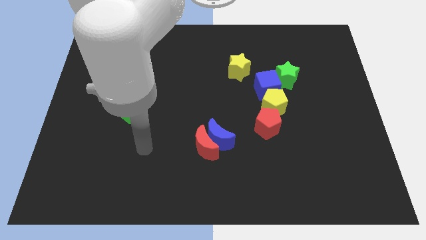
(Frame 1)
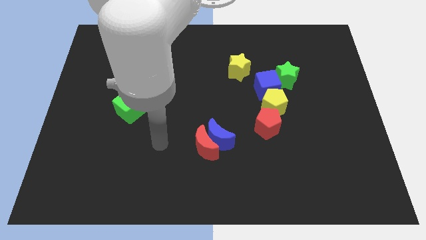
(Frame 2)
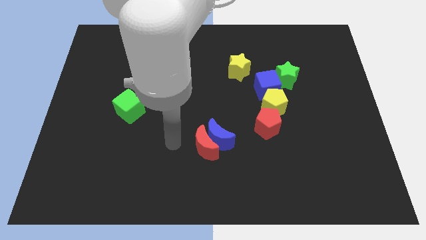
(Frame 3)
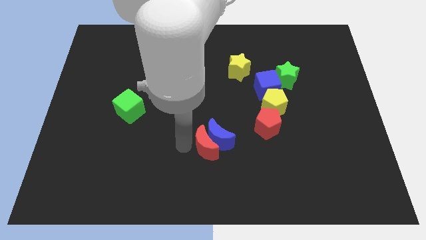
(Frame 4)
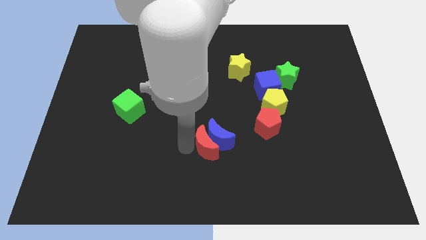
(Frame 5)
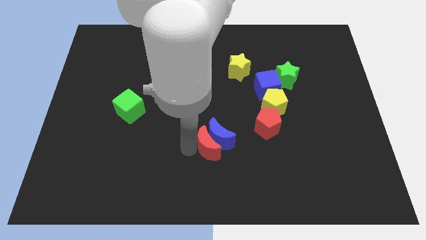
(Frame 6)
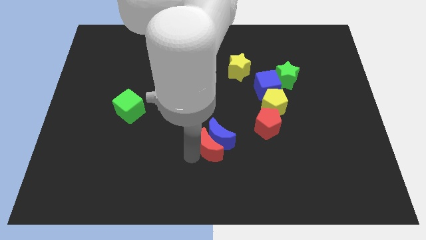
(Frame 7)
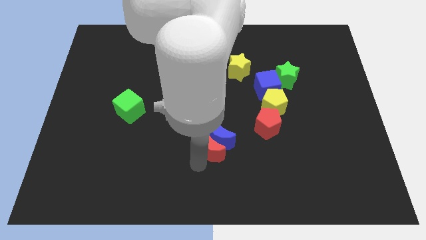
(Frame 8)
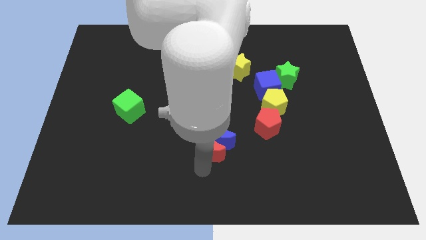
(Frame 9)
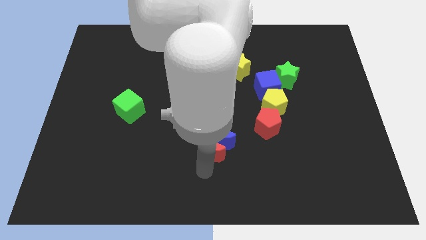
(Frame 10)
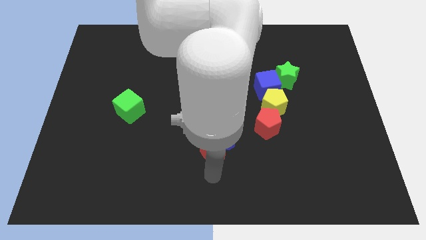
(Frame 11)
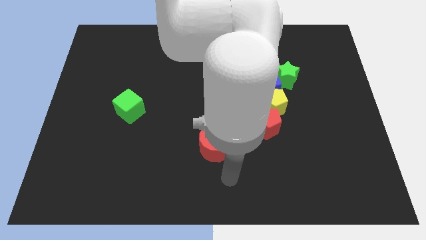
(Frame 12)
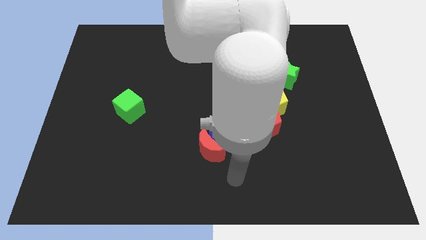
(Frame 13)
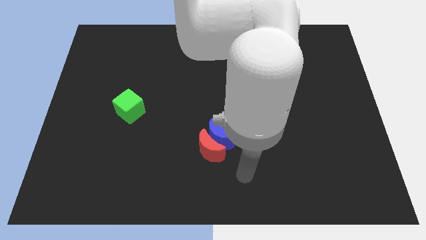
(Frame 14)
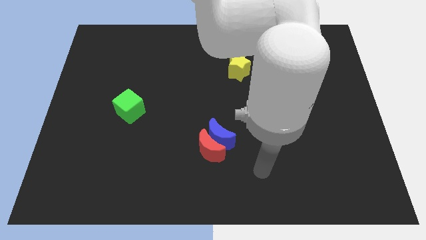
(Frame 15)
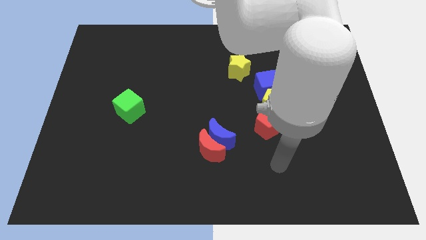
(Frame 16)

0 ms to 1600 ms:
tap the red moon

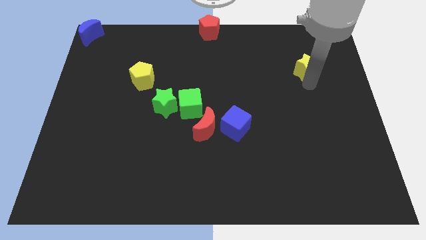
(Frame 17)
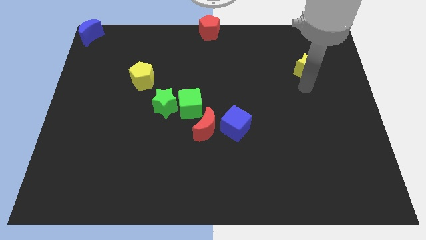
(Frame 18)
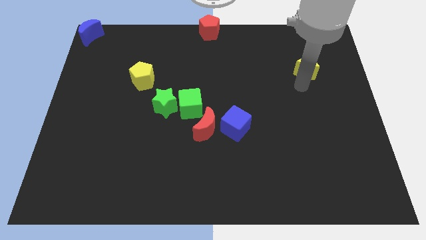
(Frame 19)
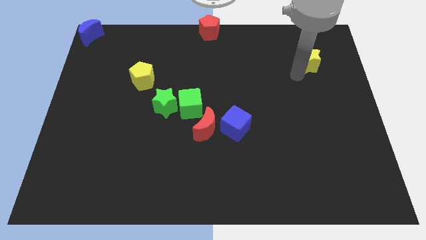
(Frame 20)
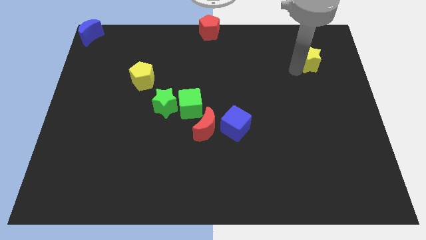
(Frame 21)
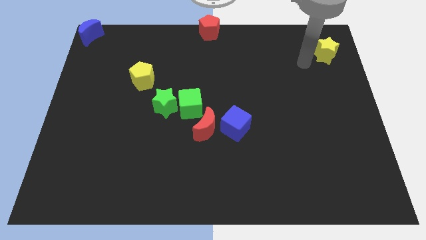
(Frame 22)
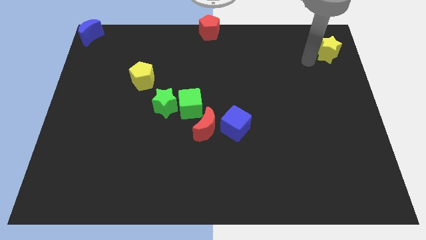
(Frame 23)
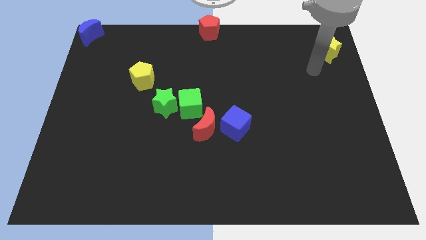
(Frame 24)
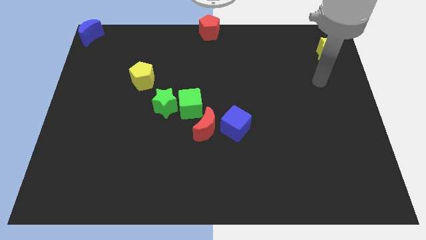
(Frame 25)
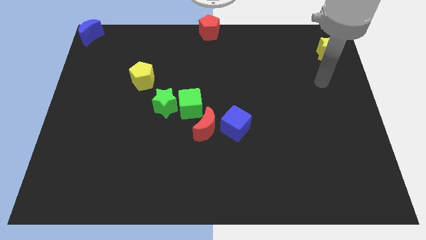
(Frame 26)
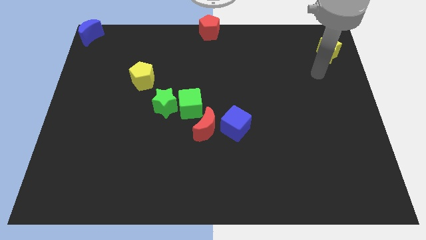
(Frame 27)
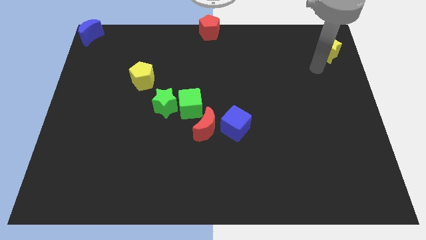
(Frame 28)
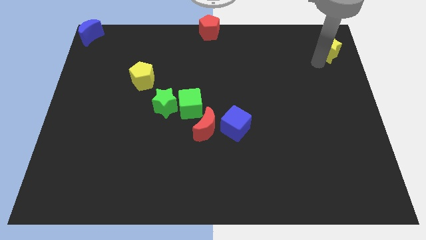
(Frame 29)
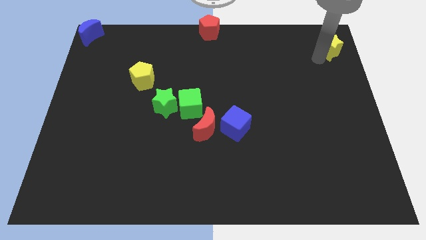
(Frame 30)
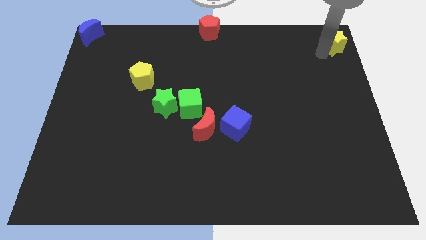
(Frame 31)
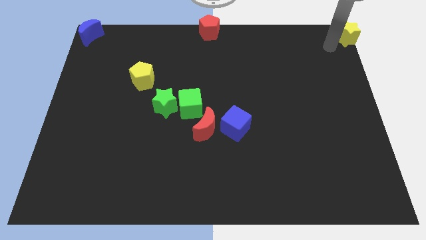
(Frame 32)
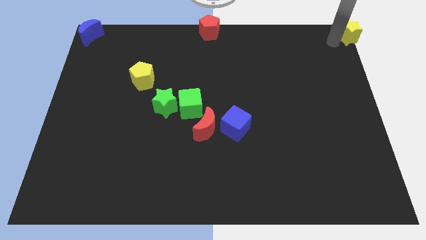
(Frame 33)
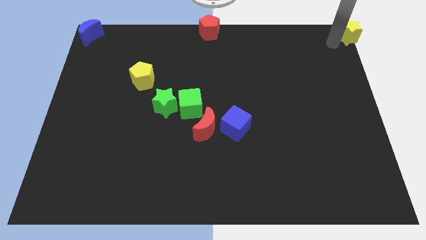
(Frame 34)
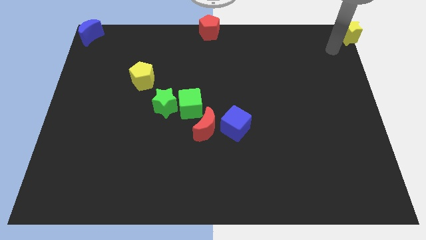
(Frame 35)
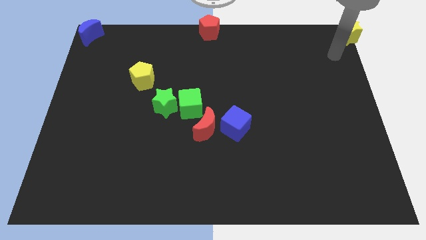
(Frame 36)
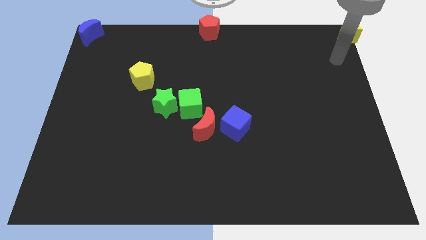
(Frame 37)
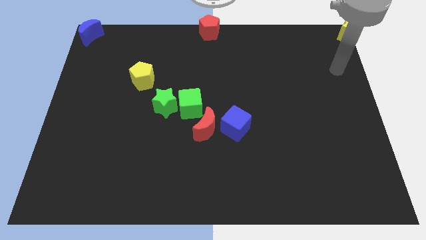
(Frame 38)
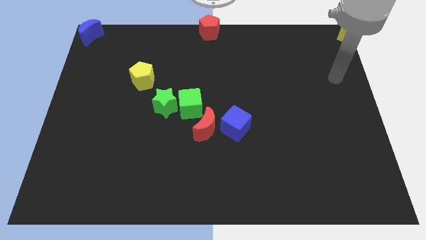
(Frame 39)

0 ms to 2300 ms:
place the yellow star to the top right

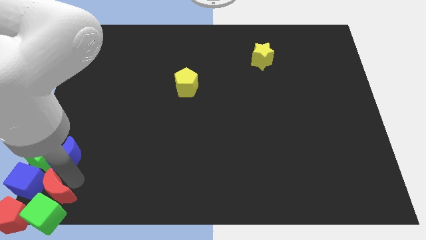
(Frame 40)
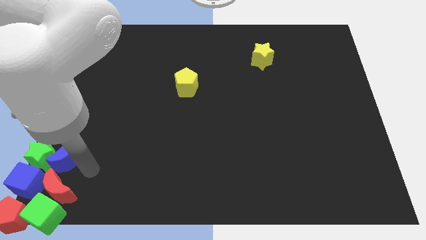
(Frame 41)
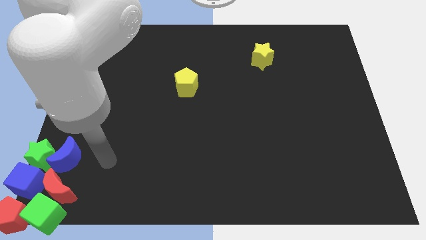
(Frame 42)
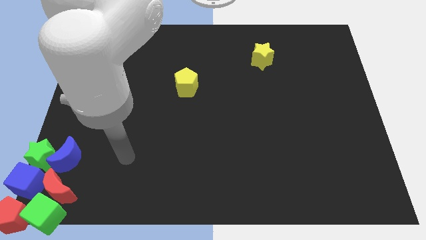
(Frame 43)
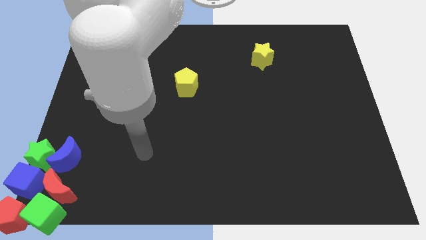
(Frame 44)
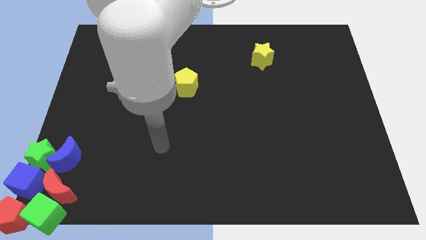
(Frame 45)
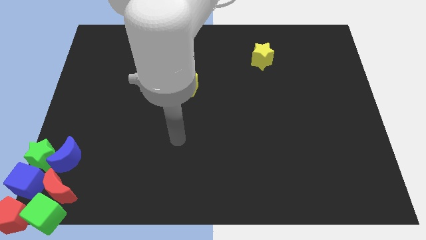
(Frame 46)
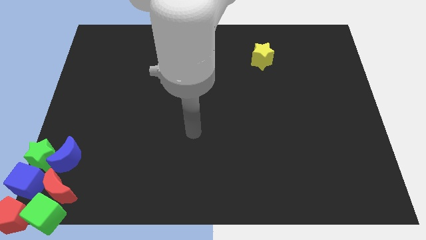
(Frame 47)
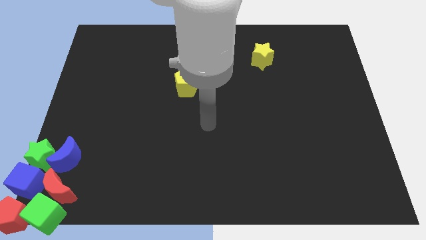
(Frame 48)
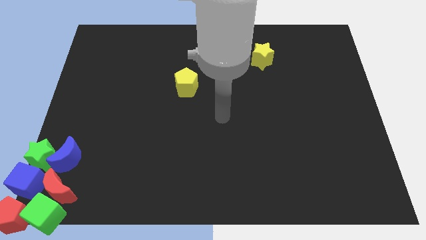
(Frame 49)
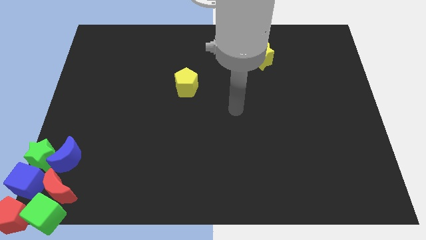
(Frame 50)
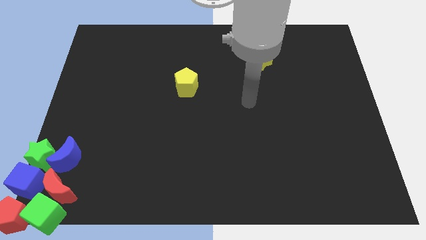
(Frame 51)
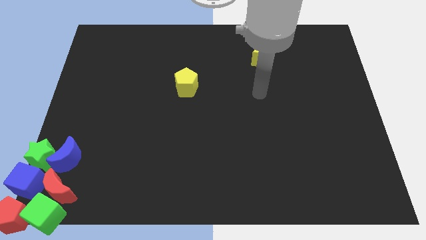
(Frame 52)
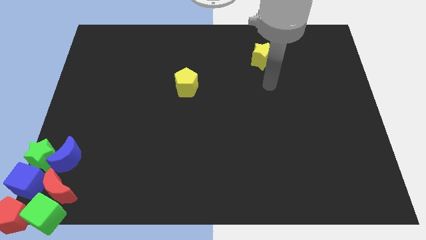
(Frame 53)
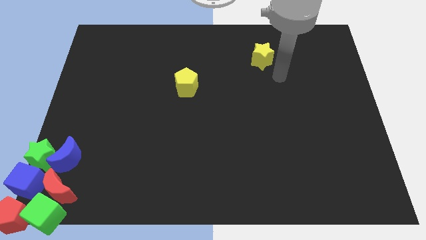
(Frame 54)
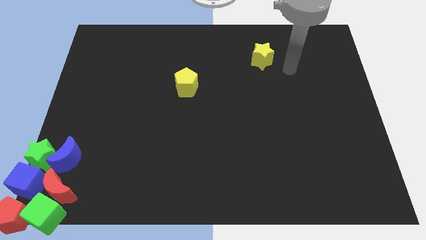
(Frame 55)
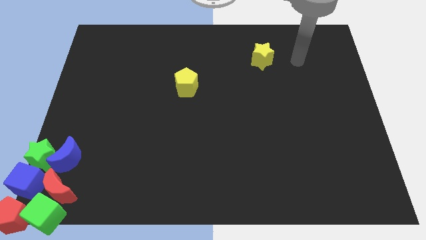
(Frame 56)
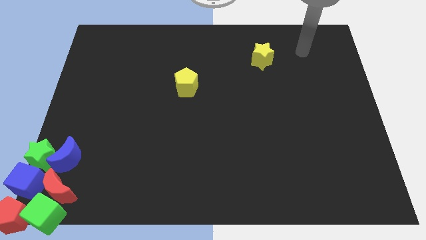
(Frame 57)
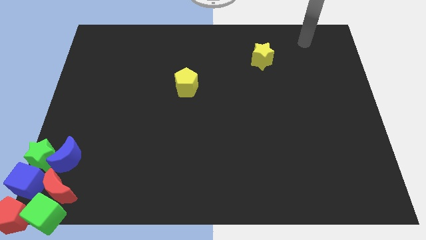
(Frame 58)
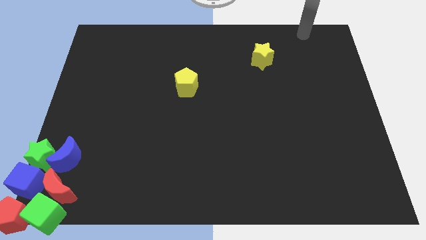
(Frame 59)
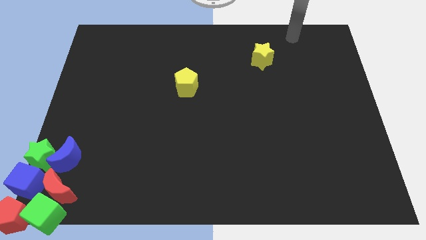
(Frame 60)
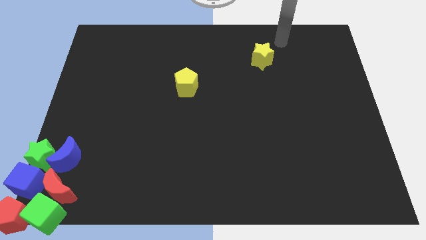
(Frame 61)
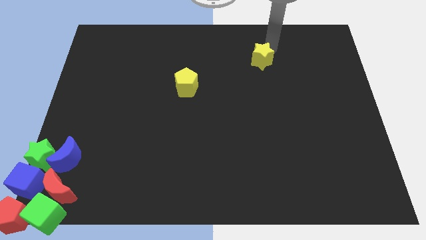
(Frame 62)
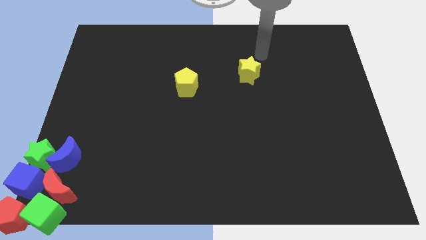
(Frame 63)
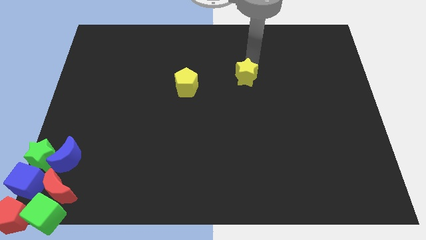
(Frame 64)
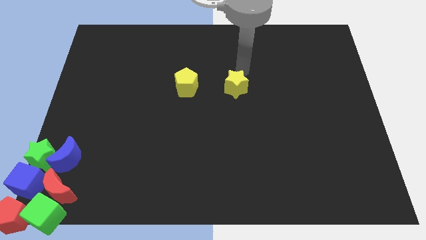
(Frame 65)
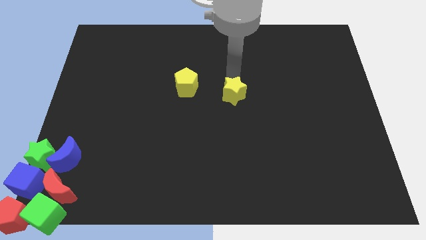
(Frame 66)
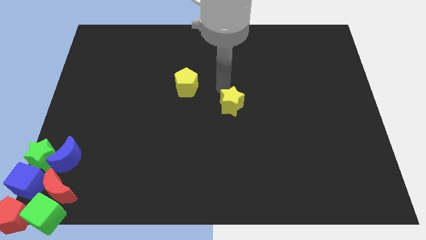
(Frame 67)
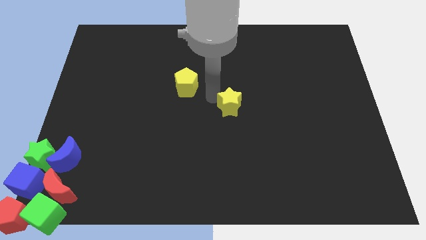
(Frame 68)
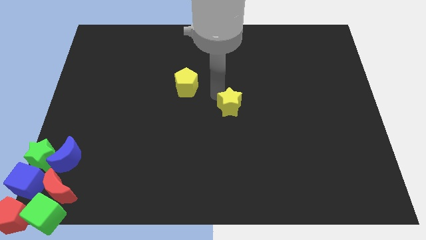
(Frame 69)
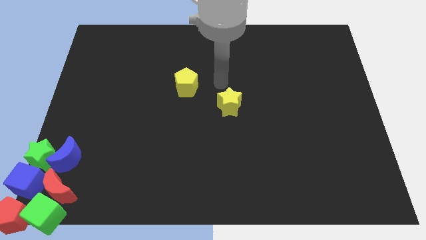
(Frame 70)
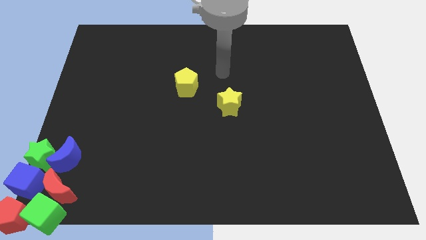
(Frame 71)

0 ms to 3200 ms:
move the yellow star to the center

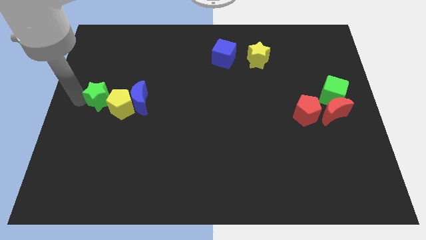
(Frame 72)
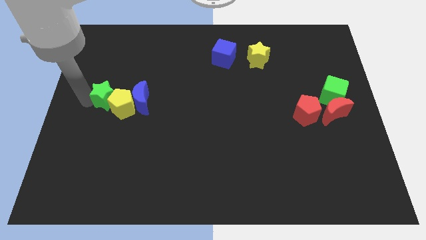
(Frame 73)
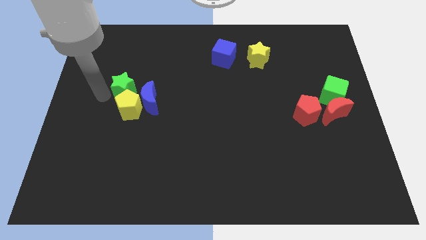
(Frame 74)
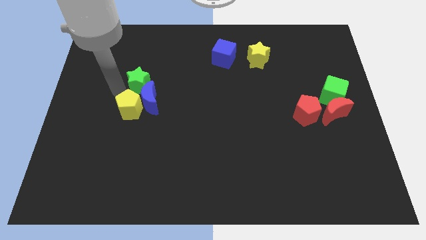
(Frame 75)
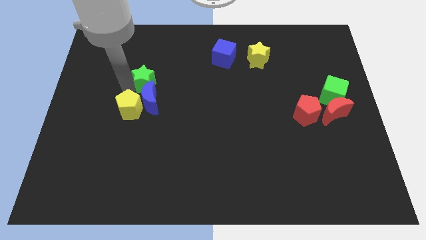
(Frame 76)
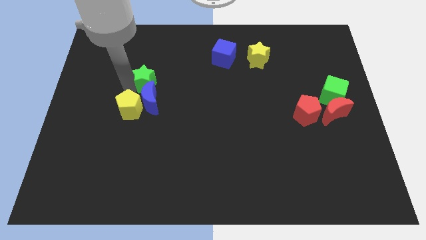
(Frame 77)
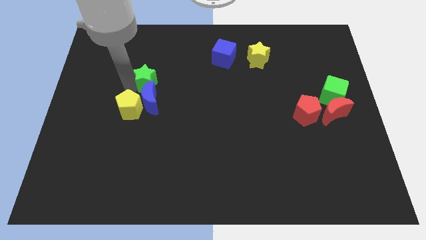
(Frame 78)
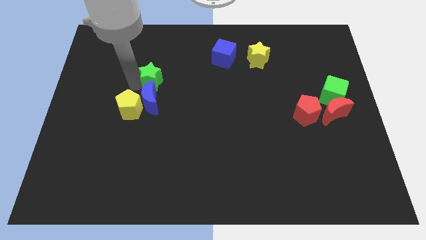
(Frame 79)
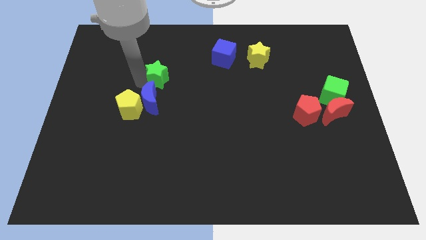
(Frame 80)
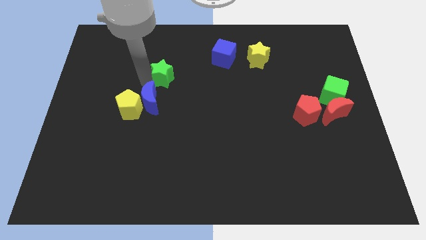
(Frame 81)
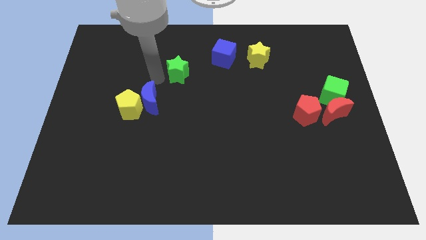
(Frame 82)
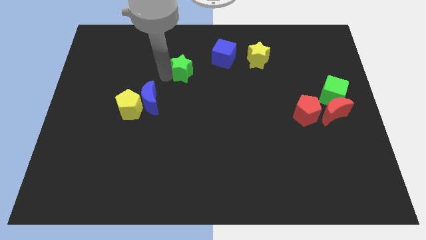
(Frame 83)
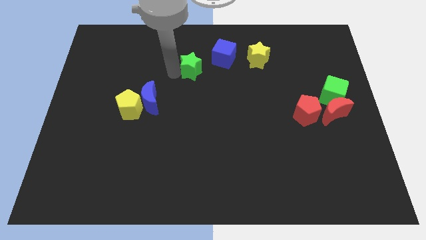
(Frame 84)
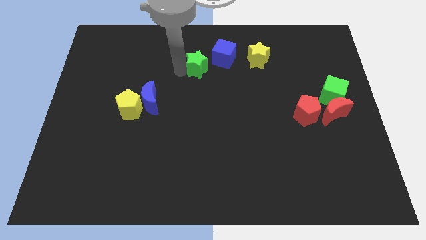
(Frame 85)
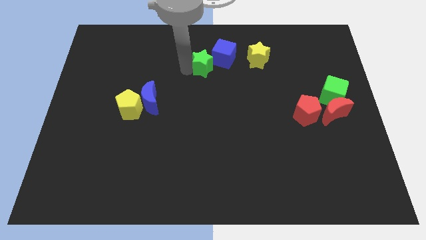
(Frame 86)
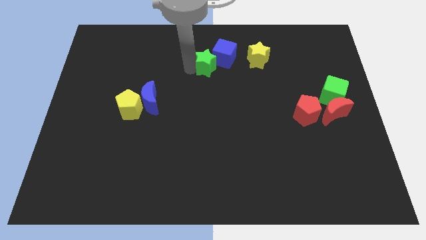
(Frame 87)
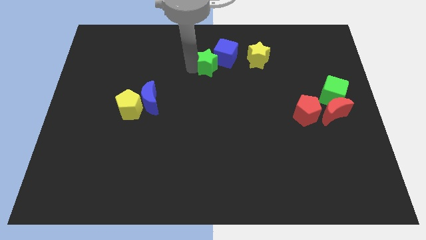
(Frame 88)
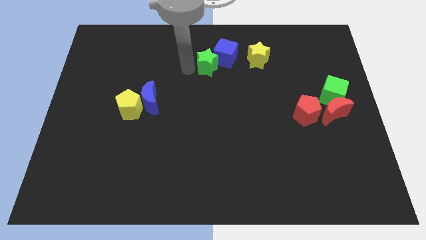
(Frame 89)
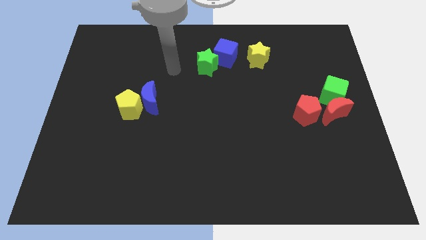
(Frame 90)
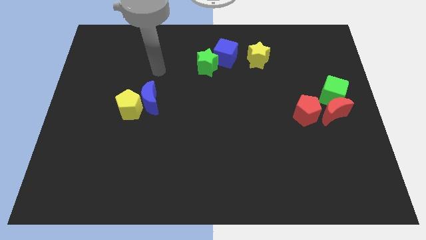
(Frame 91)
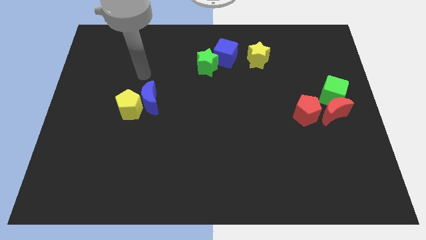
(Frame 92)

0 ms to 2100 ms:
push the green star into the blue cube
